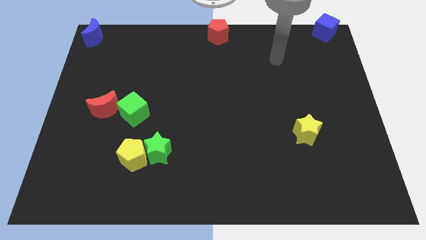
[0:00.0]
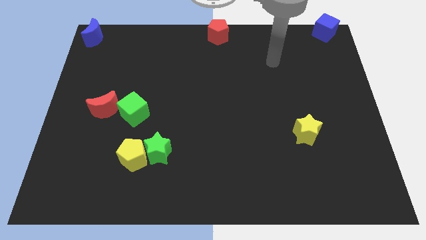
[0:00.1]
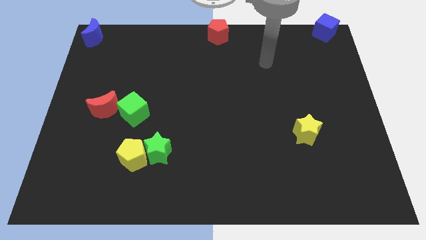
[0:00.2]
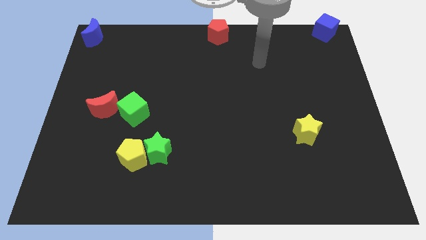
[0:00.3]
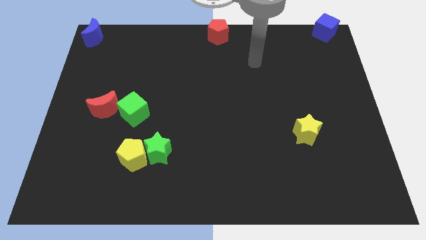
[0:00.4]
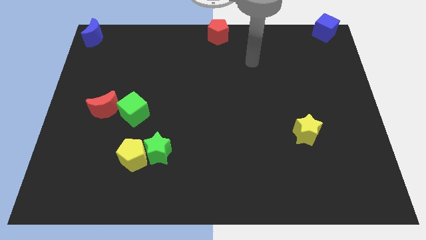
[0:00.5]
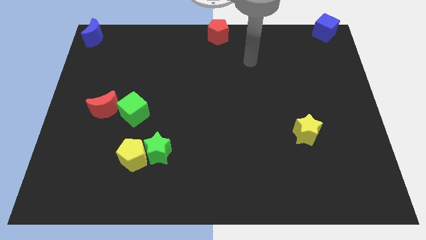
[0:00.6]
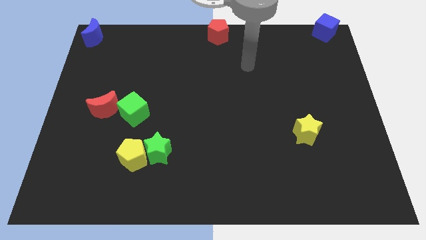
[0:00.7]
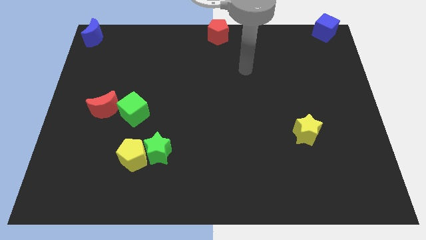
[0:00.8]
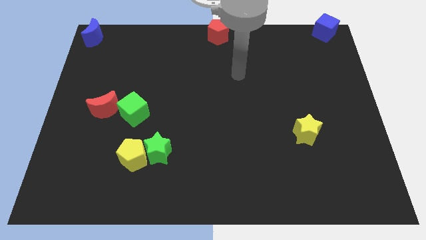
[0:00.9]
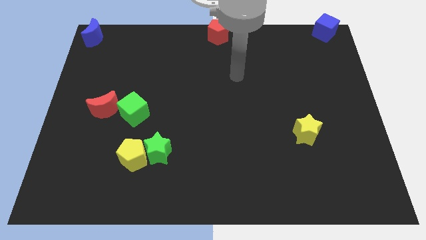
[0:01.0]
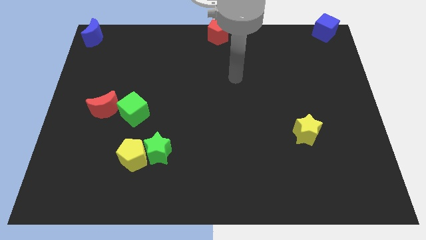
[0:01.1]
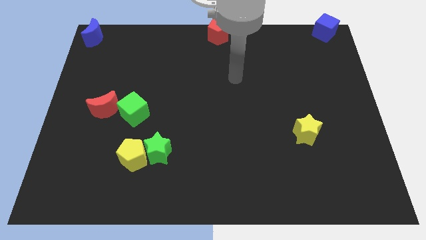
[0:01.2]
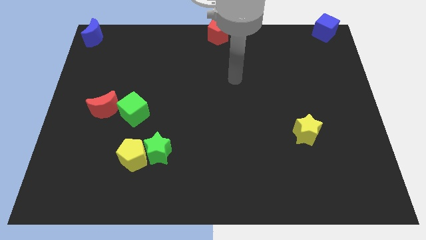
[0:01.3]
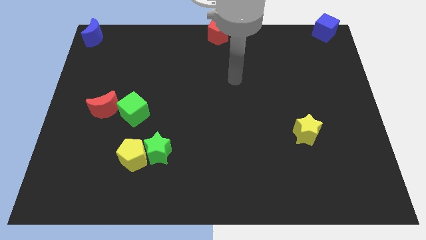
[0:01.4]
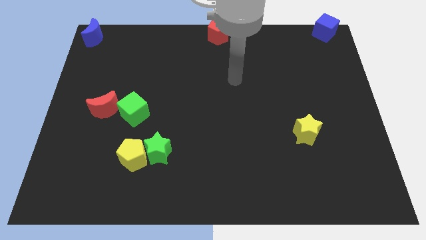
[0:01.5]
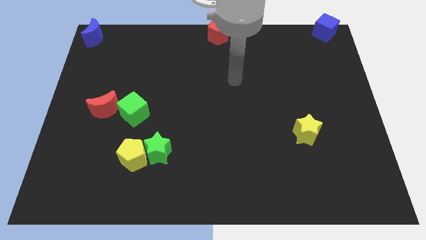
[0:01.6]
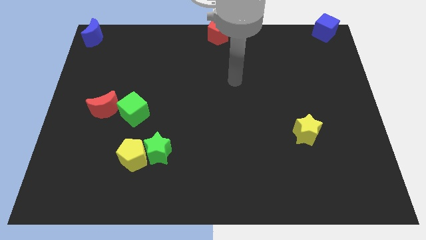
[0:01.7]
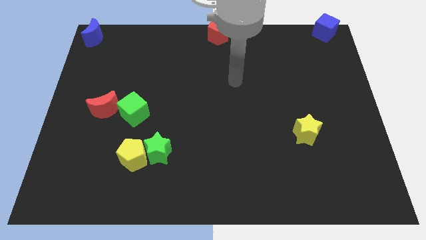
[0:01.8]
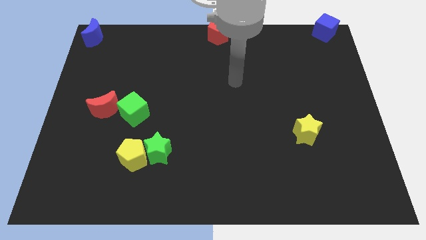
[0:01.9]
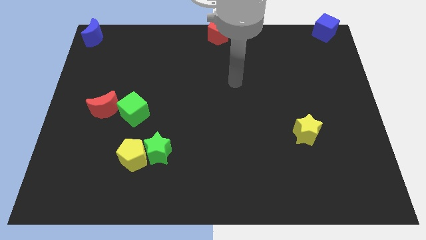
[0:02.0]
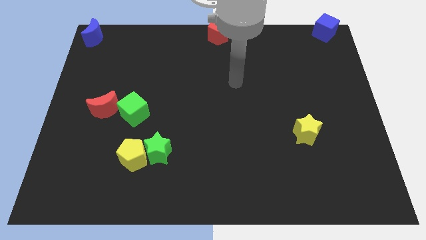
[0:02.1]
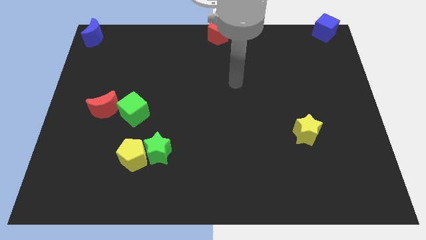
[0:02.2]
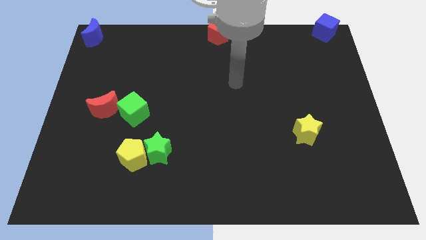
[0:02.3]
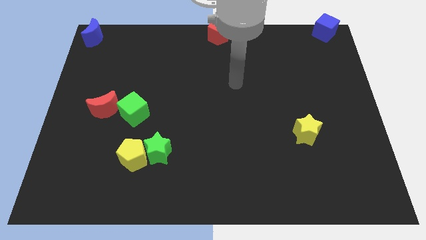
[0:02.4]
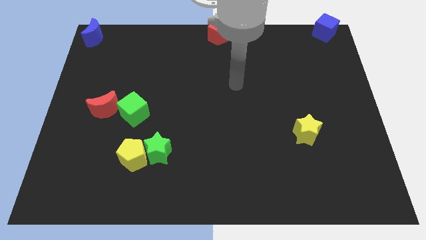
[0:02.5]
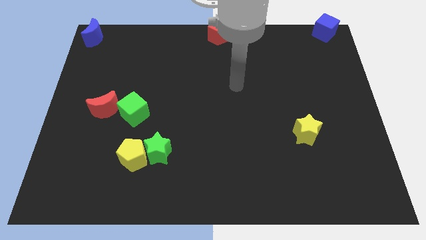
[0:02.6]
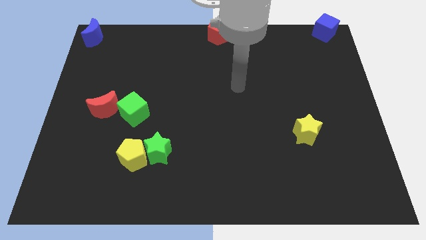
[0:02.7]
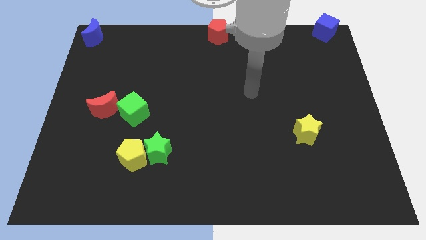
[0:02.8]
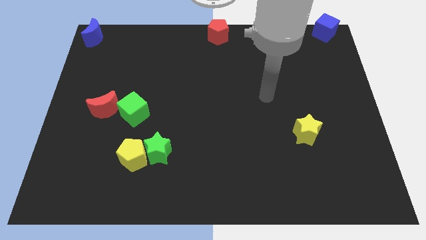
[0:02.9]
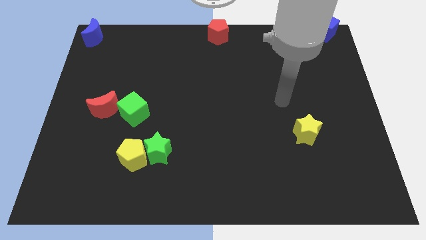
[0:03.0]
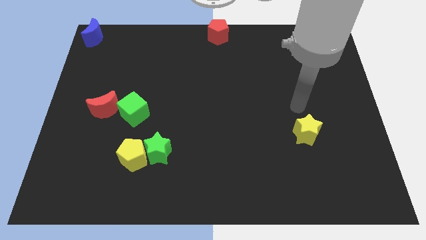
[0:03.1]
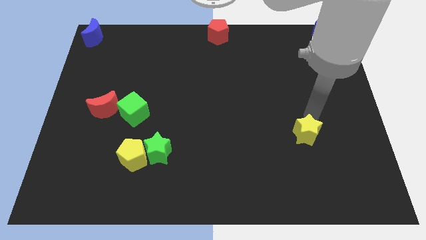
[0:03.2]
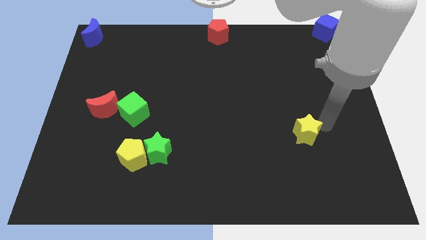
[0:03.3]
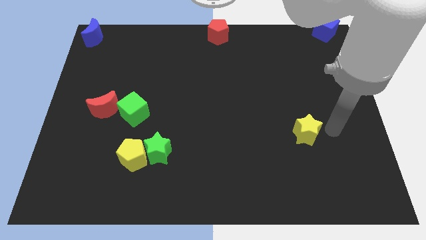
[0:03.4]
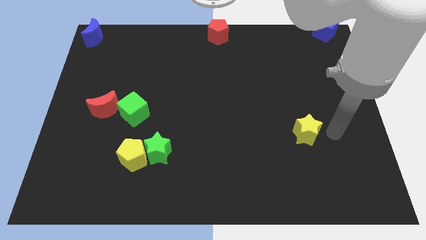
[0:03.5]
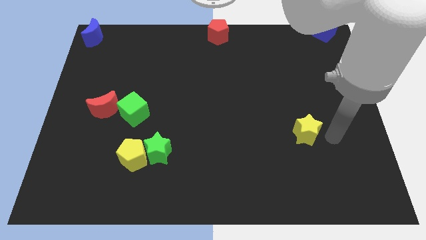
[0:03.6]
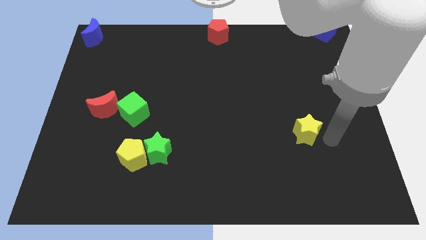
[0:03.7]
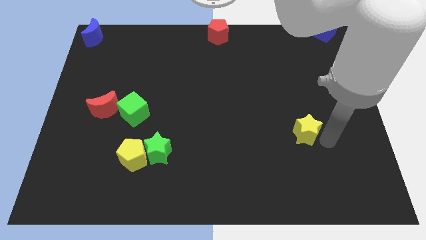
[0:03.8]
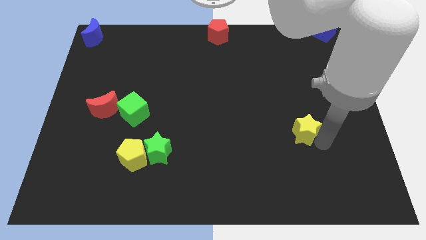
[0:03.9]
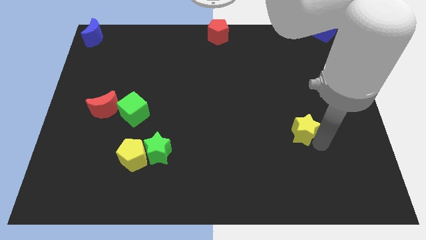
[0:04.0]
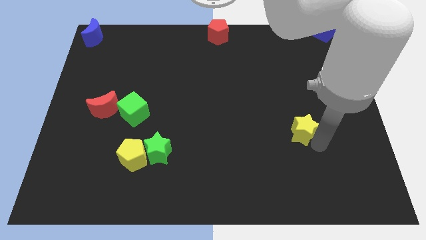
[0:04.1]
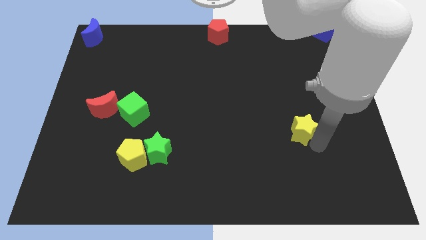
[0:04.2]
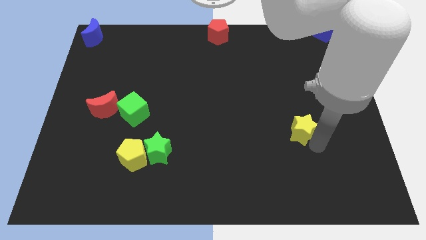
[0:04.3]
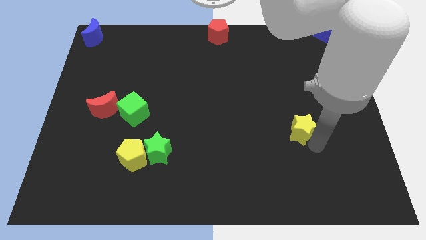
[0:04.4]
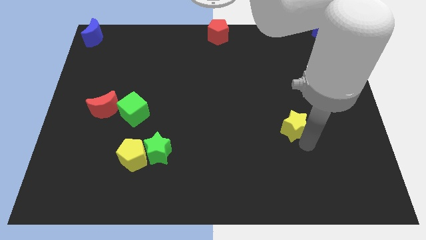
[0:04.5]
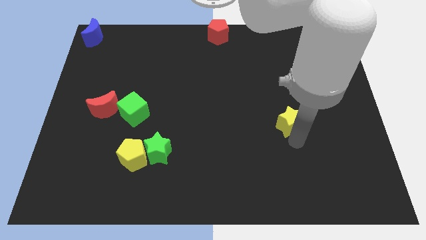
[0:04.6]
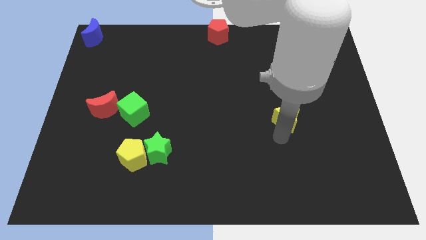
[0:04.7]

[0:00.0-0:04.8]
slightly tap the yellow star towards the top side

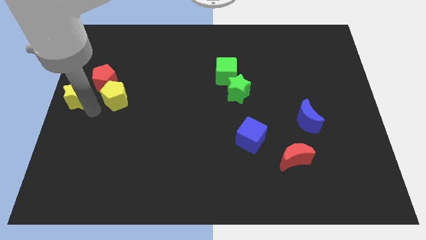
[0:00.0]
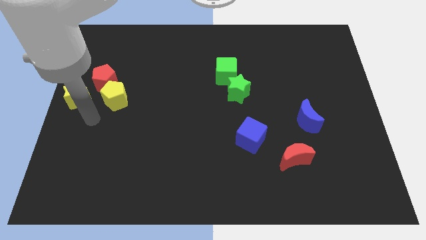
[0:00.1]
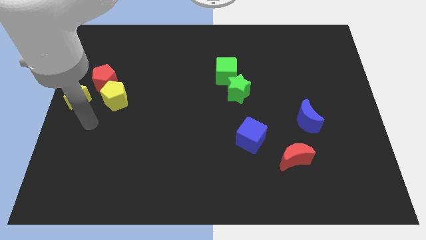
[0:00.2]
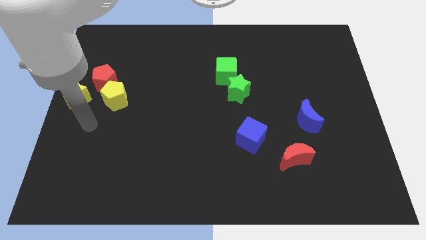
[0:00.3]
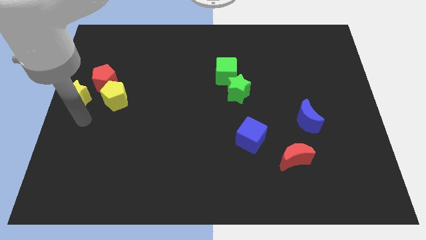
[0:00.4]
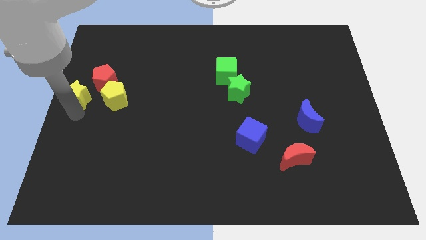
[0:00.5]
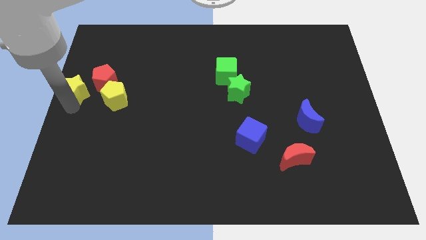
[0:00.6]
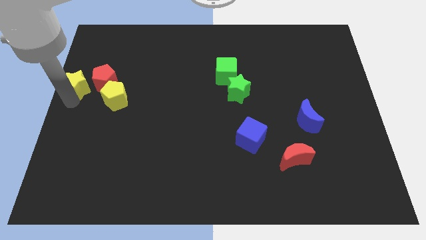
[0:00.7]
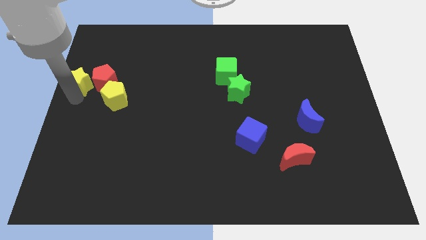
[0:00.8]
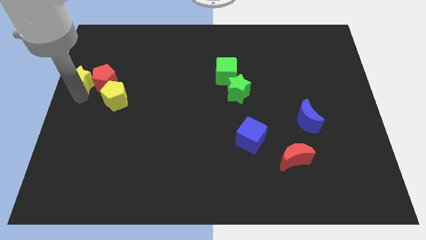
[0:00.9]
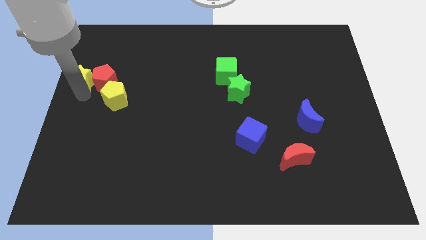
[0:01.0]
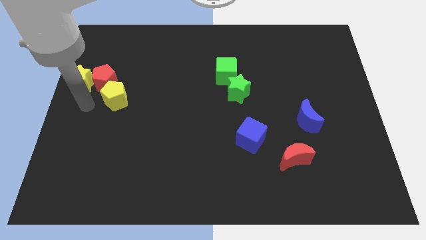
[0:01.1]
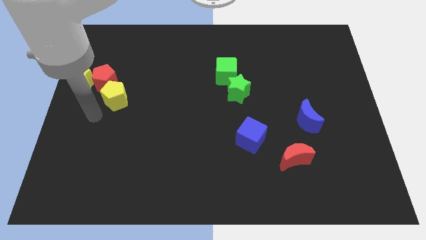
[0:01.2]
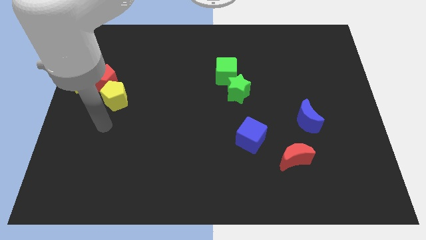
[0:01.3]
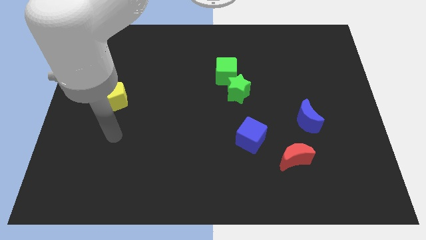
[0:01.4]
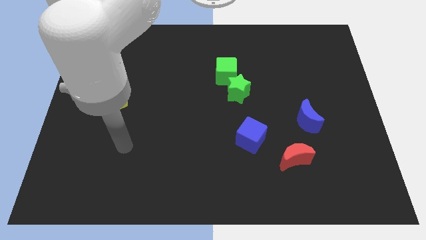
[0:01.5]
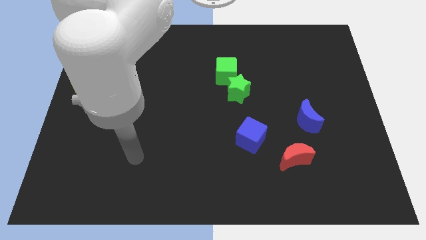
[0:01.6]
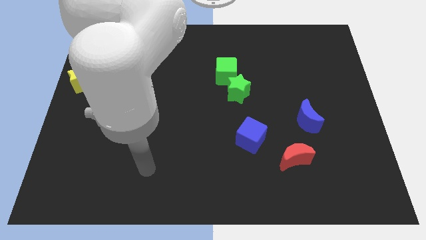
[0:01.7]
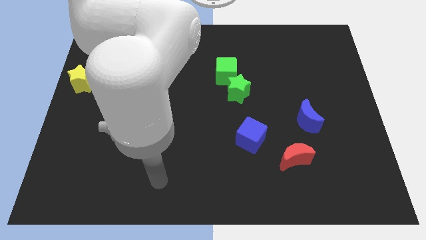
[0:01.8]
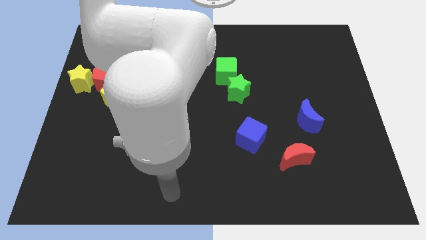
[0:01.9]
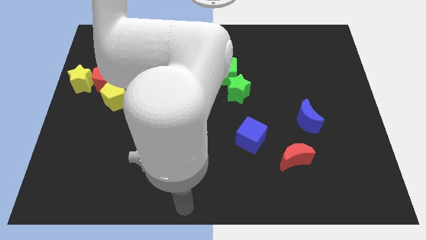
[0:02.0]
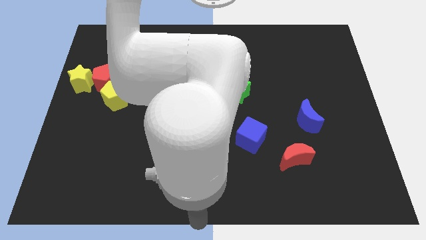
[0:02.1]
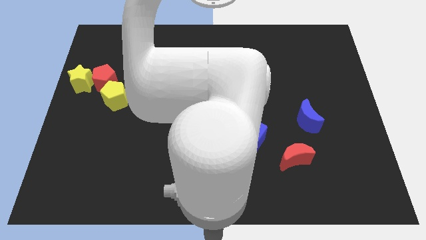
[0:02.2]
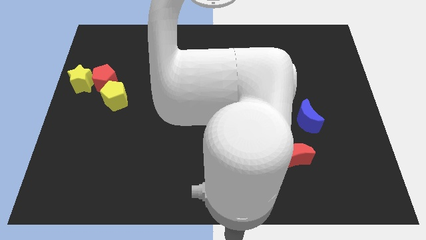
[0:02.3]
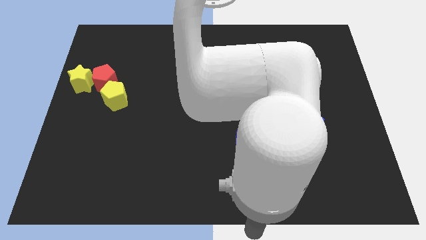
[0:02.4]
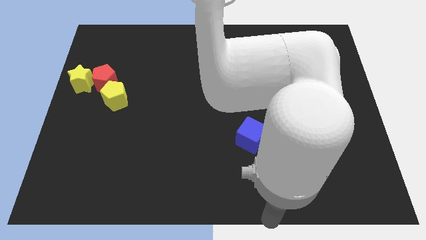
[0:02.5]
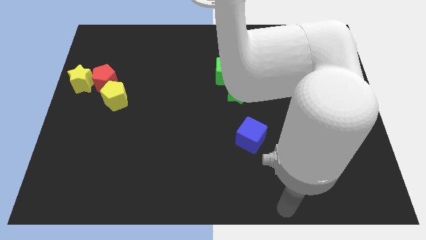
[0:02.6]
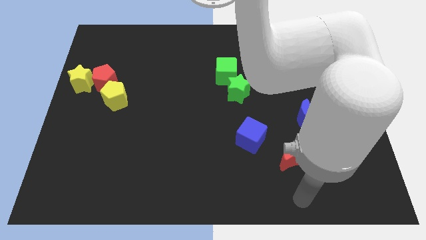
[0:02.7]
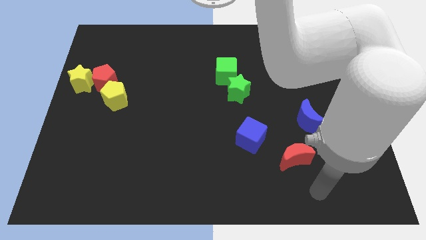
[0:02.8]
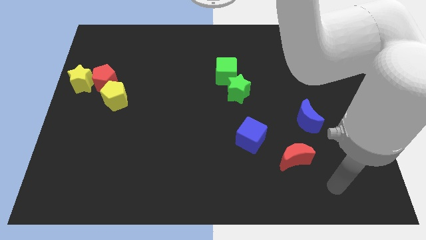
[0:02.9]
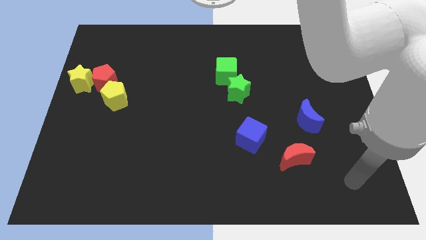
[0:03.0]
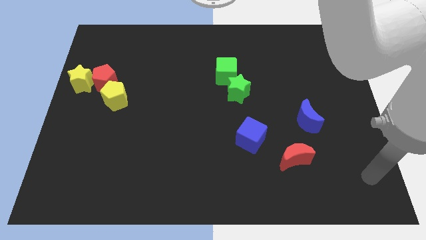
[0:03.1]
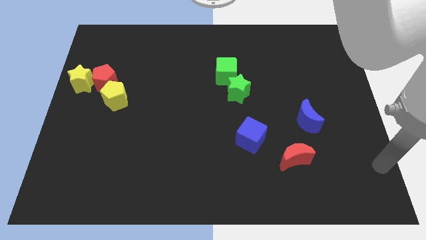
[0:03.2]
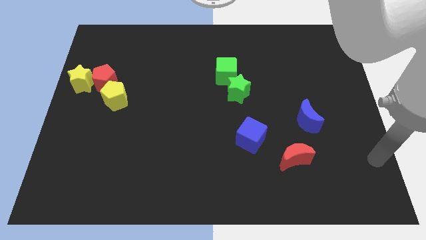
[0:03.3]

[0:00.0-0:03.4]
move your hand away from the yellow star

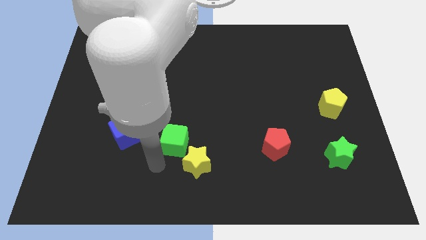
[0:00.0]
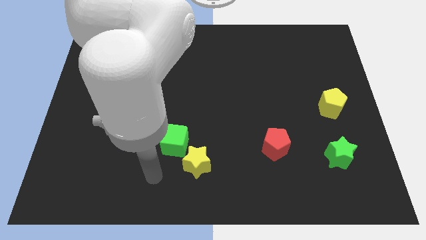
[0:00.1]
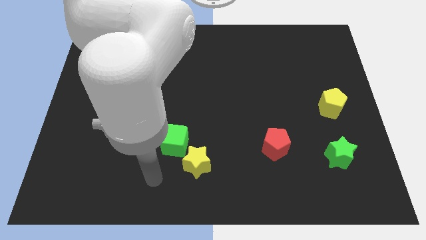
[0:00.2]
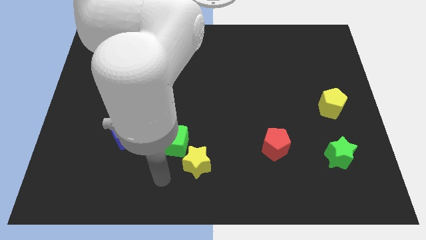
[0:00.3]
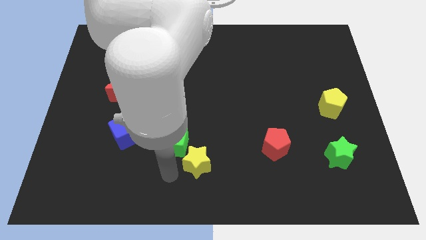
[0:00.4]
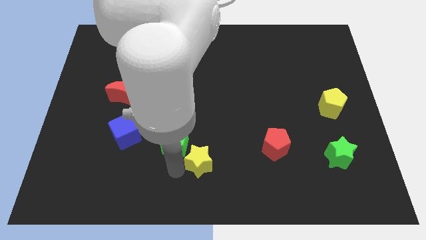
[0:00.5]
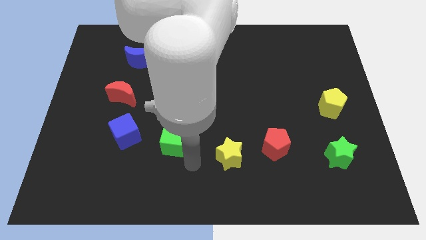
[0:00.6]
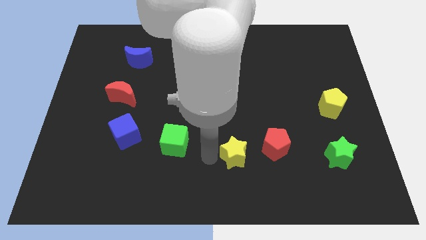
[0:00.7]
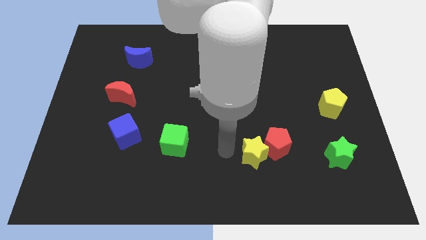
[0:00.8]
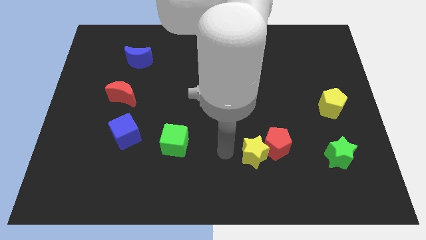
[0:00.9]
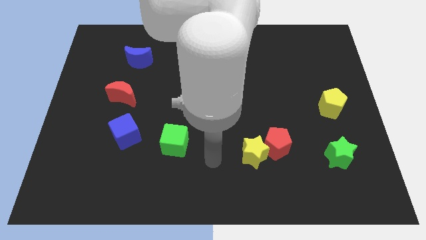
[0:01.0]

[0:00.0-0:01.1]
push yellow star in to red pentagon
